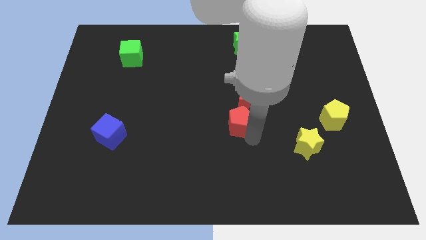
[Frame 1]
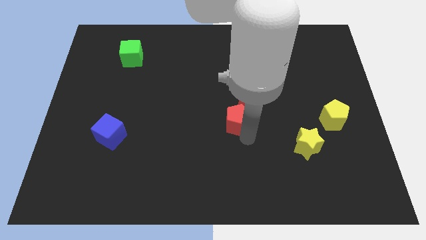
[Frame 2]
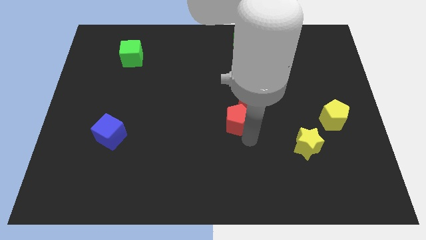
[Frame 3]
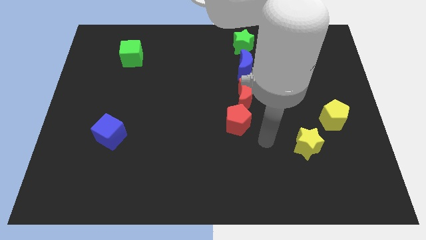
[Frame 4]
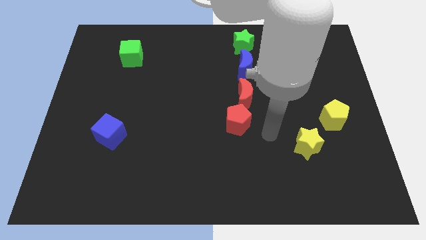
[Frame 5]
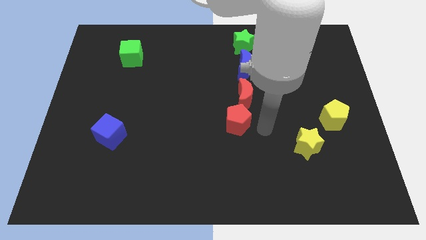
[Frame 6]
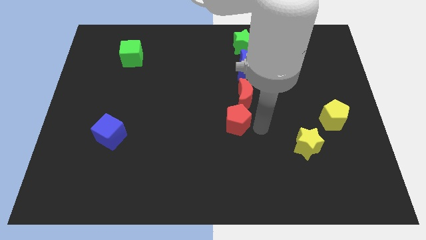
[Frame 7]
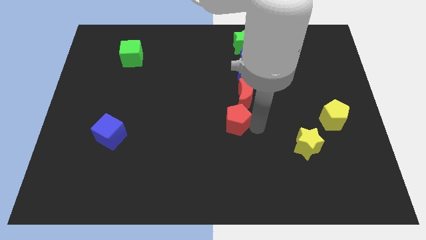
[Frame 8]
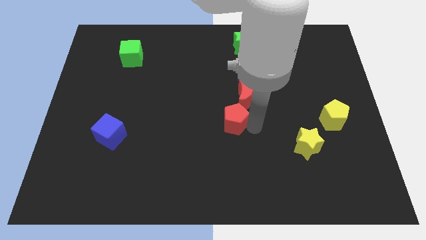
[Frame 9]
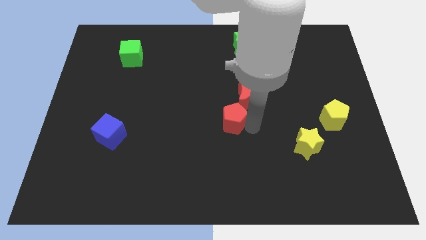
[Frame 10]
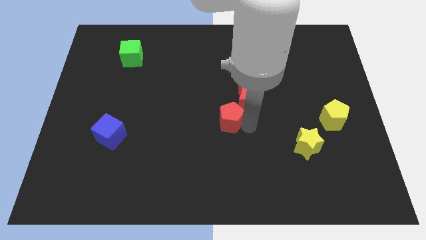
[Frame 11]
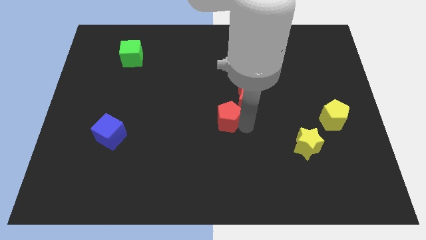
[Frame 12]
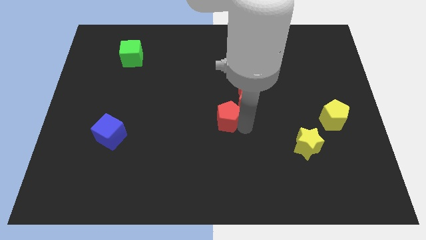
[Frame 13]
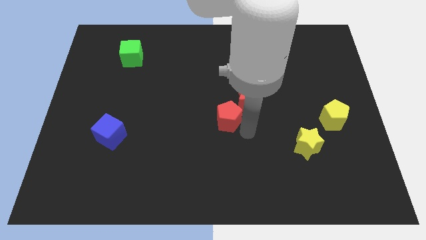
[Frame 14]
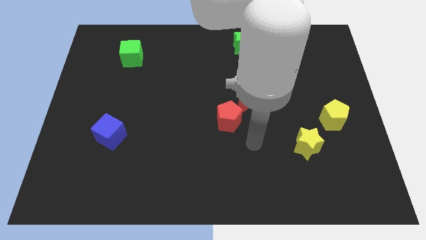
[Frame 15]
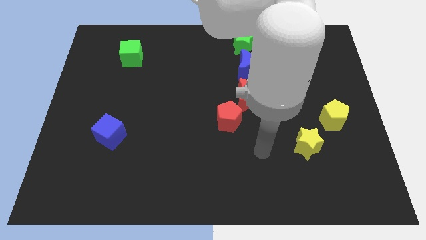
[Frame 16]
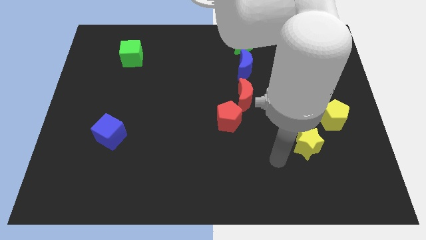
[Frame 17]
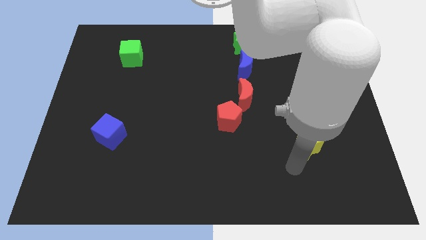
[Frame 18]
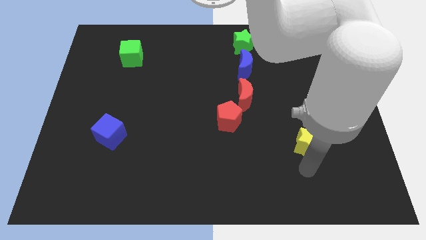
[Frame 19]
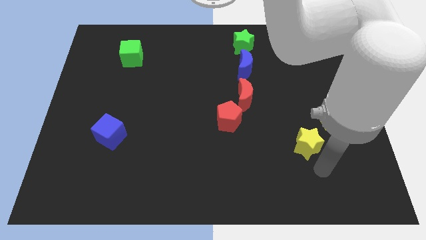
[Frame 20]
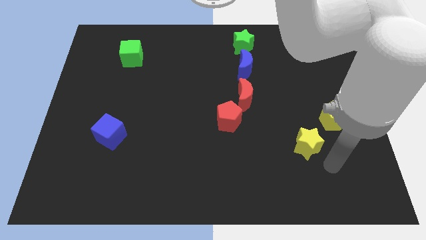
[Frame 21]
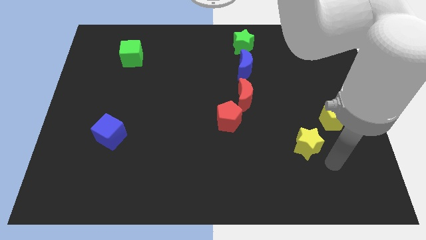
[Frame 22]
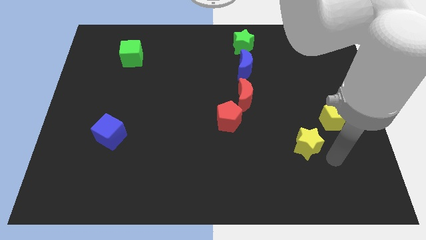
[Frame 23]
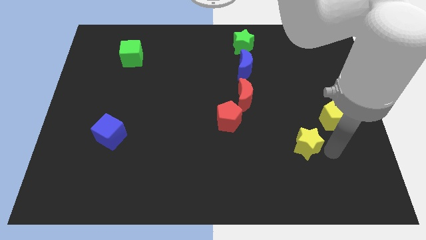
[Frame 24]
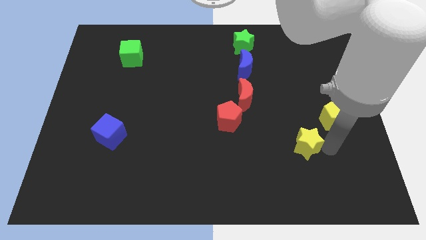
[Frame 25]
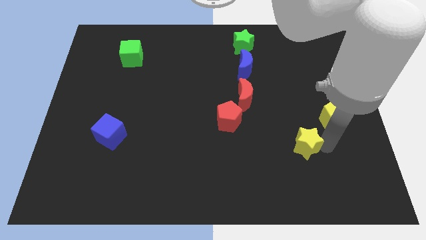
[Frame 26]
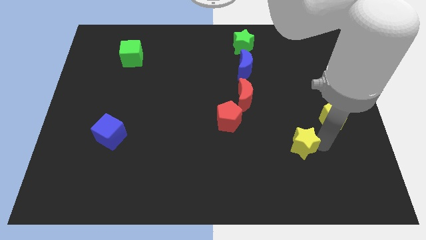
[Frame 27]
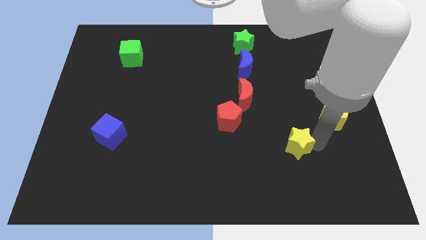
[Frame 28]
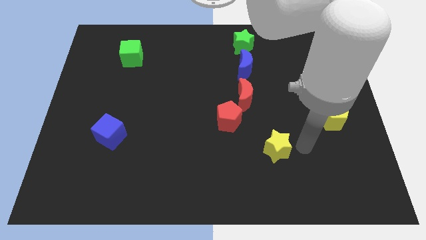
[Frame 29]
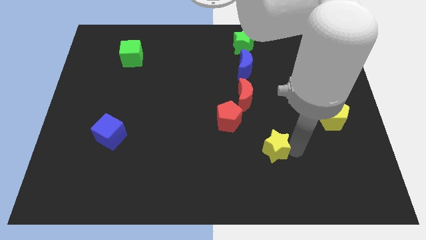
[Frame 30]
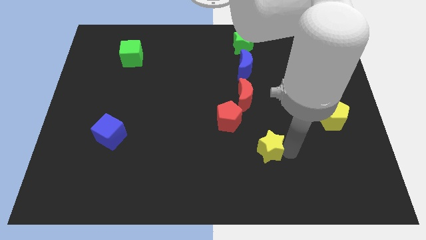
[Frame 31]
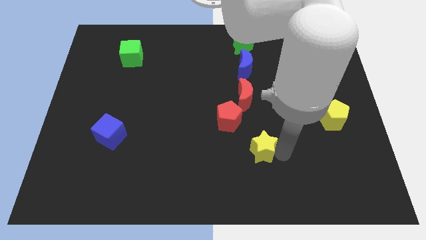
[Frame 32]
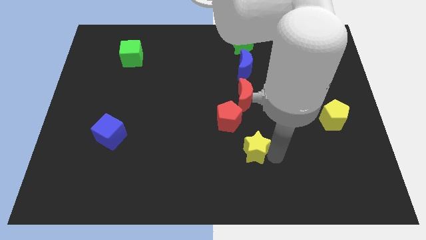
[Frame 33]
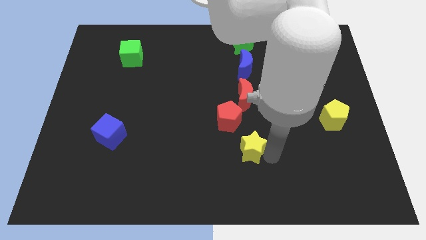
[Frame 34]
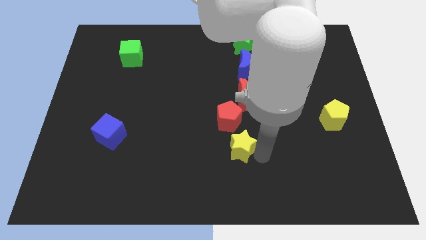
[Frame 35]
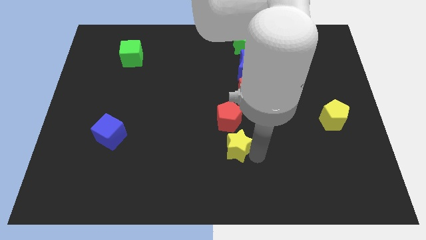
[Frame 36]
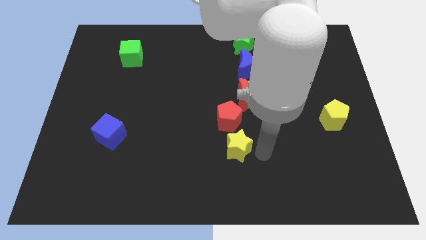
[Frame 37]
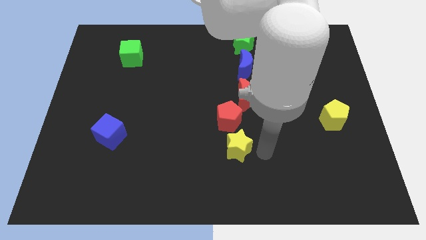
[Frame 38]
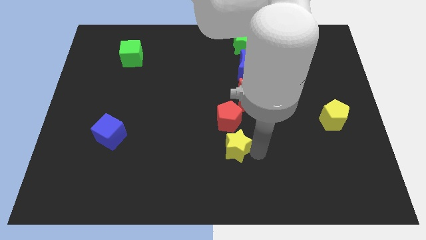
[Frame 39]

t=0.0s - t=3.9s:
place the yellow star down to the red pentagon

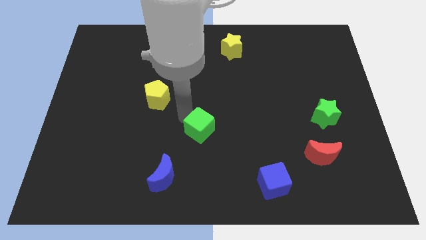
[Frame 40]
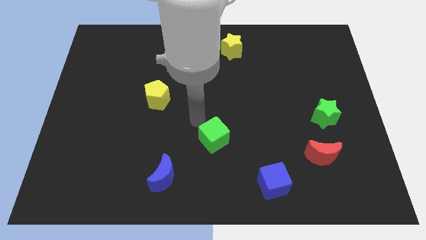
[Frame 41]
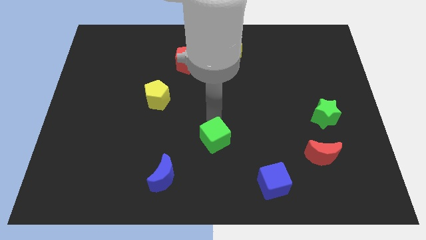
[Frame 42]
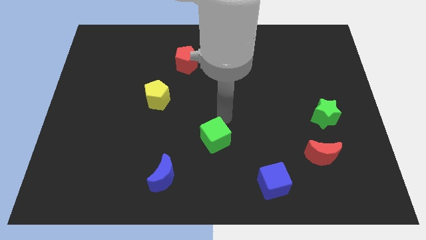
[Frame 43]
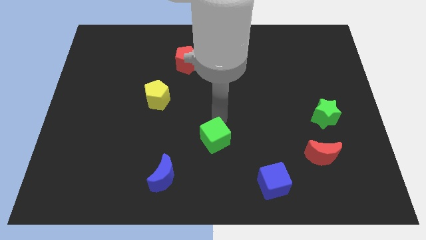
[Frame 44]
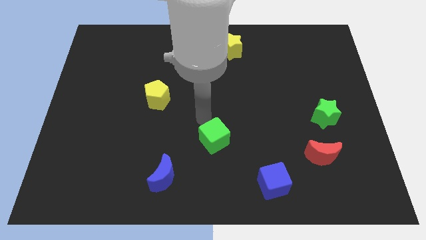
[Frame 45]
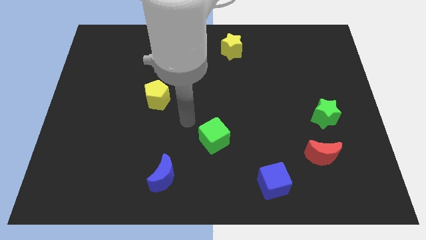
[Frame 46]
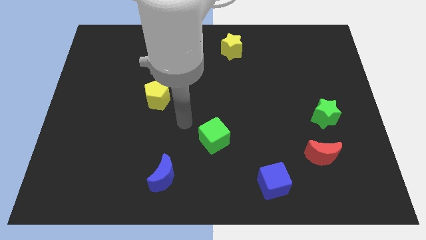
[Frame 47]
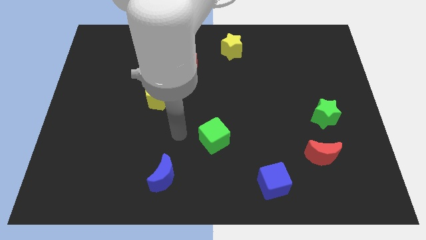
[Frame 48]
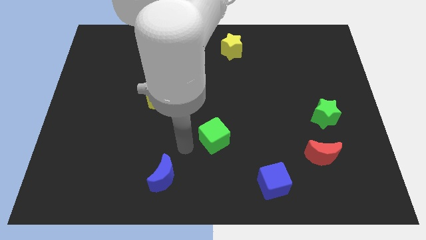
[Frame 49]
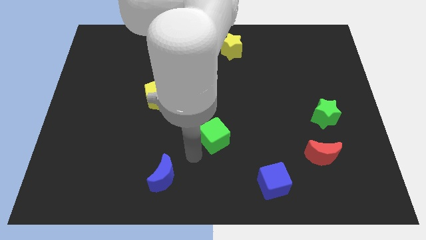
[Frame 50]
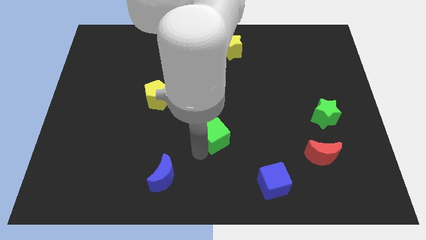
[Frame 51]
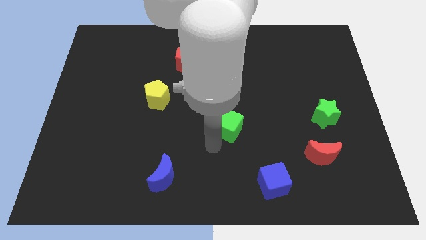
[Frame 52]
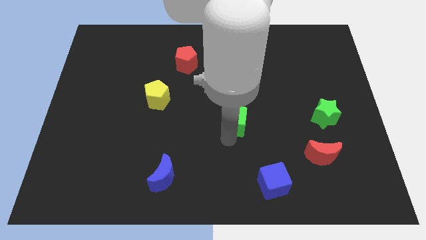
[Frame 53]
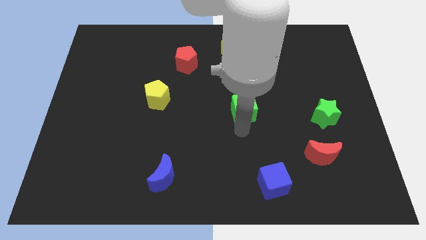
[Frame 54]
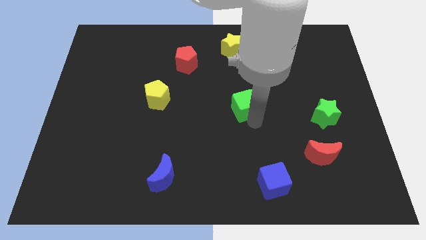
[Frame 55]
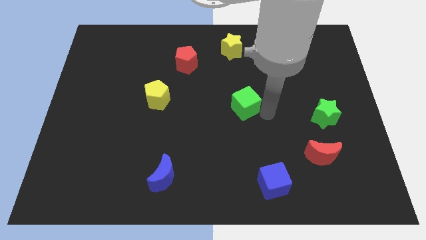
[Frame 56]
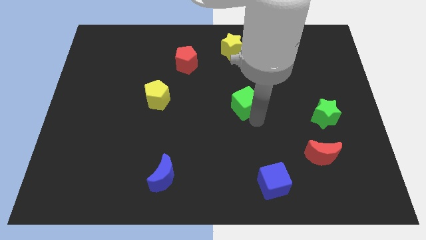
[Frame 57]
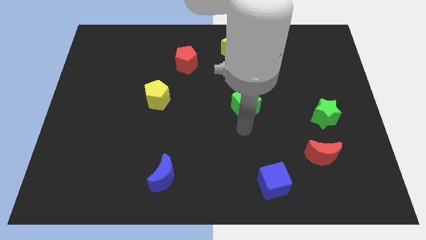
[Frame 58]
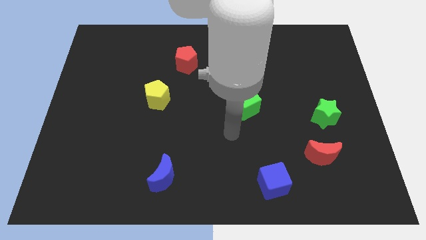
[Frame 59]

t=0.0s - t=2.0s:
place the green cube between the yellow pentagon and green star

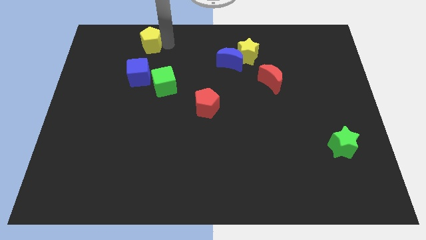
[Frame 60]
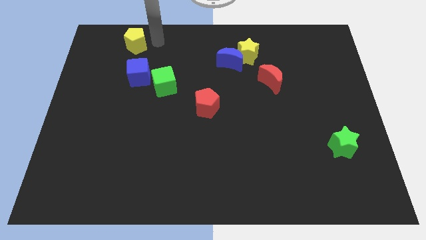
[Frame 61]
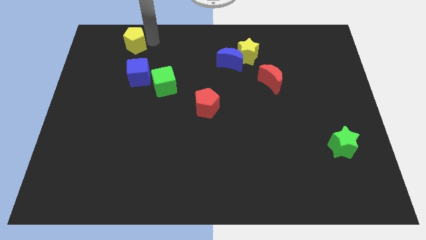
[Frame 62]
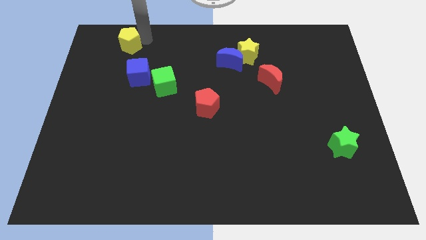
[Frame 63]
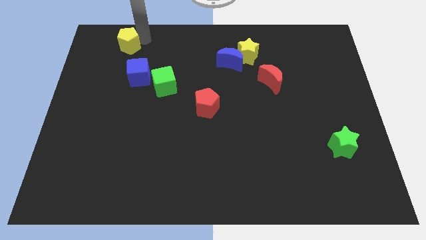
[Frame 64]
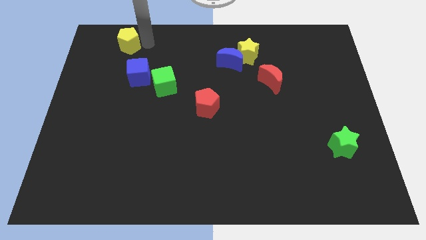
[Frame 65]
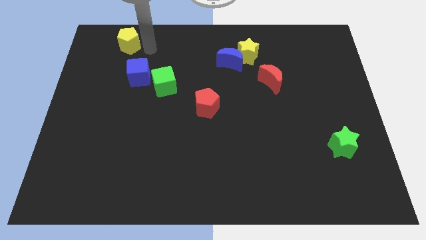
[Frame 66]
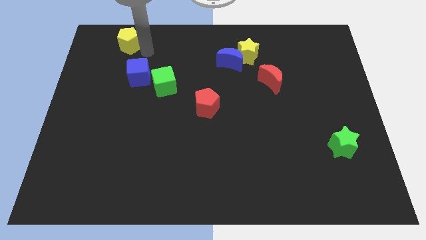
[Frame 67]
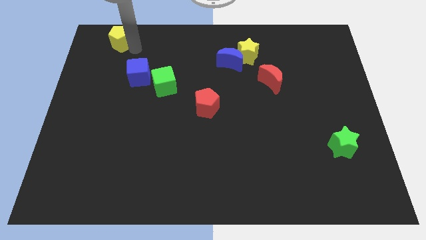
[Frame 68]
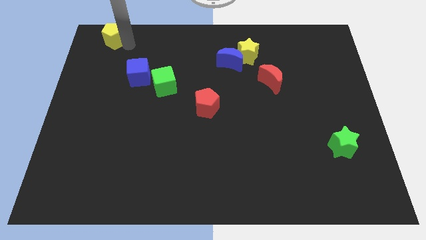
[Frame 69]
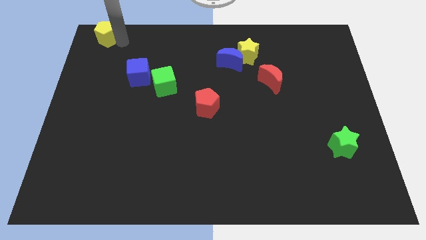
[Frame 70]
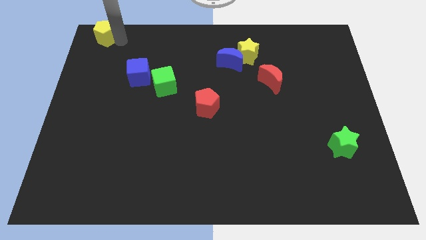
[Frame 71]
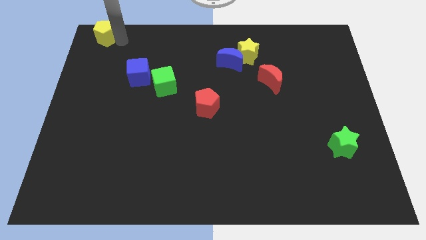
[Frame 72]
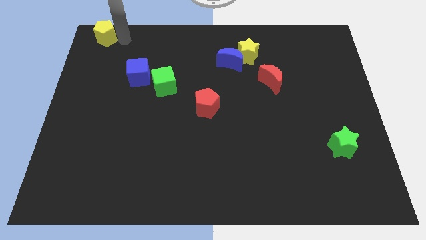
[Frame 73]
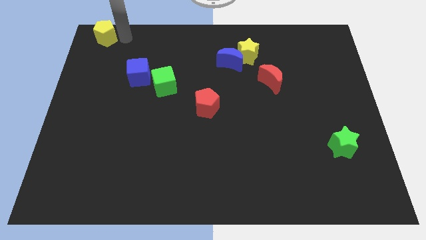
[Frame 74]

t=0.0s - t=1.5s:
move the yellow pentagon towards the top left corner of the board

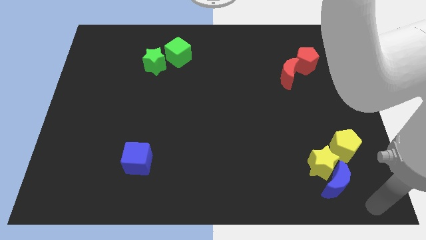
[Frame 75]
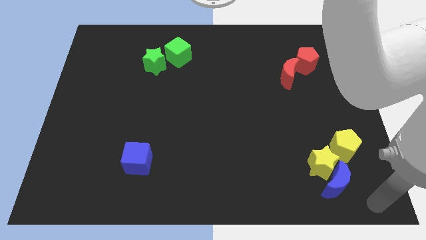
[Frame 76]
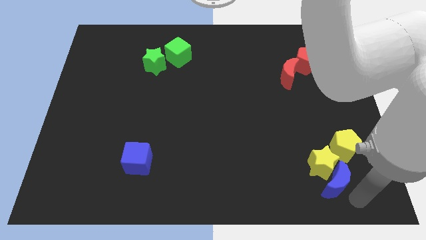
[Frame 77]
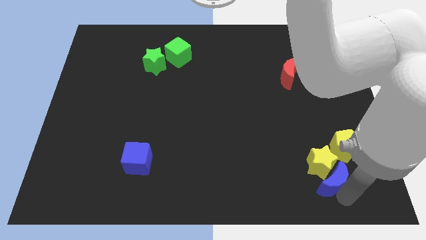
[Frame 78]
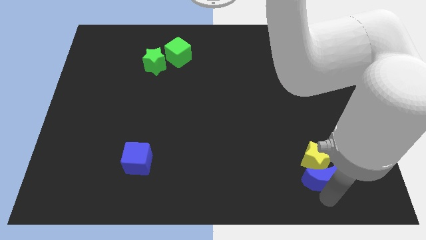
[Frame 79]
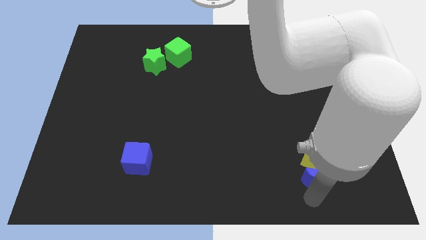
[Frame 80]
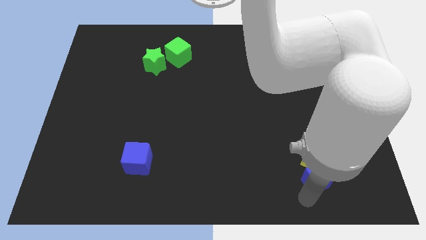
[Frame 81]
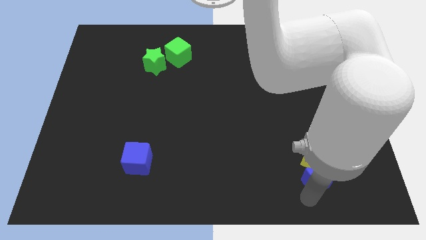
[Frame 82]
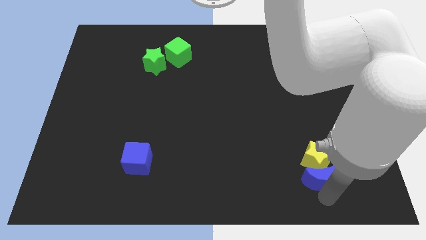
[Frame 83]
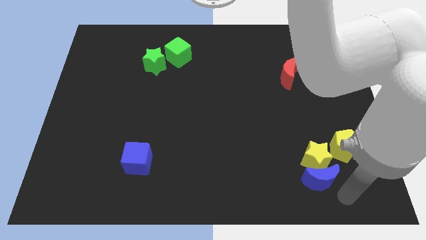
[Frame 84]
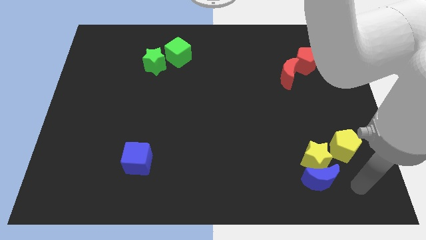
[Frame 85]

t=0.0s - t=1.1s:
push the blue crescent into the bottom side of the yellow star

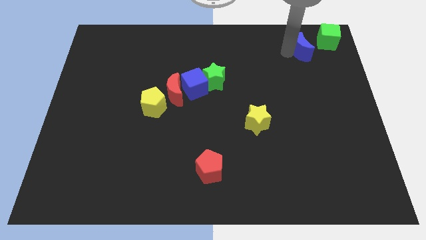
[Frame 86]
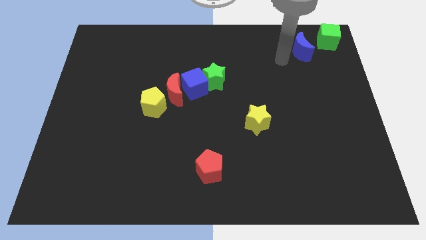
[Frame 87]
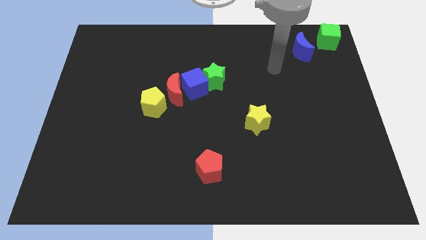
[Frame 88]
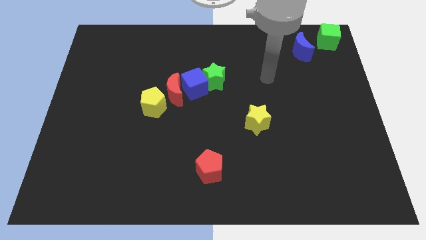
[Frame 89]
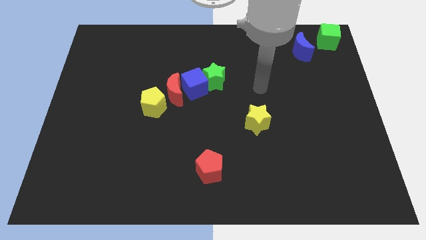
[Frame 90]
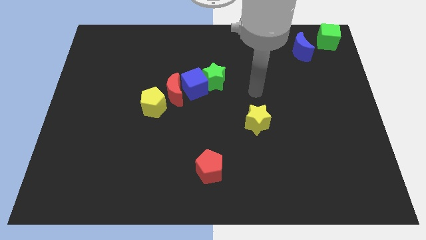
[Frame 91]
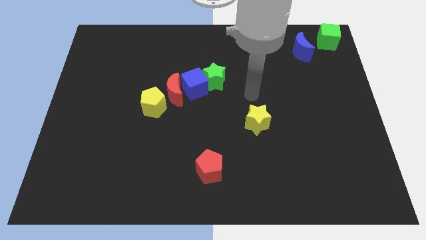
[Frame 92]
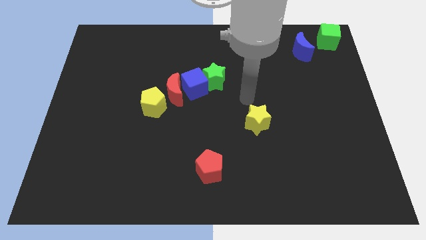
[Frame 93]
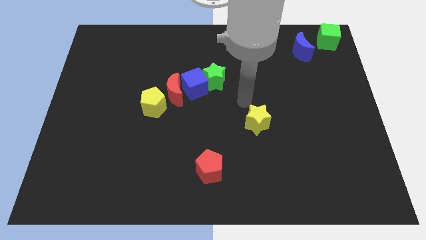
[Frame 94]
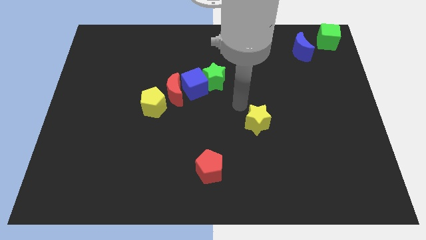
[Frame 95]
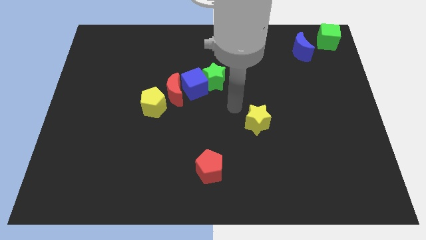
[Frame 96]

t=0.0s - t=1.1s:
move the arm away from the blue moon
